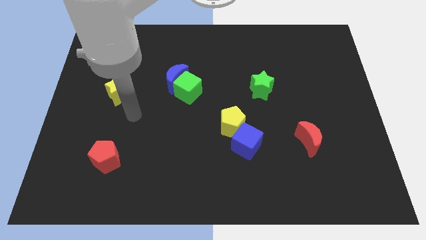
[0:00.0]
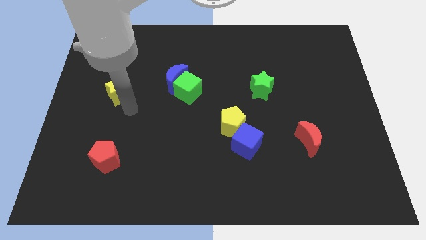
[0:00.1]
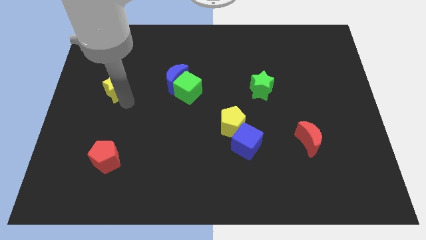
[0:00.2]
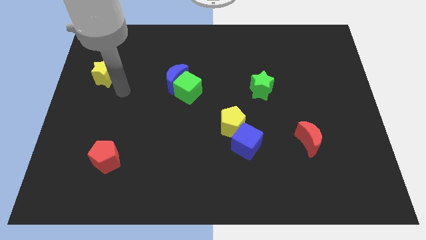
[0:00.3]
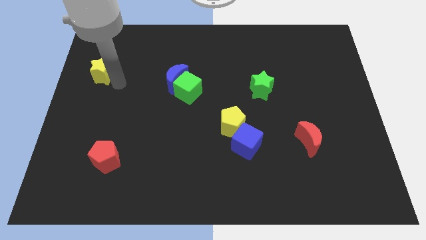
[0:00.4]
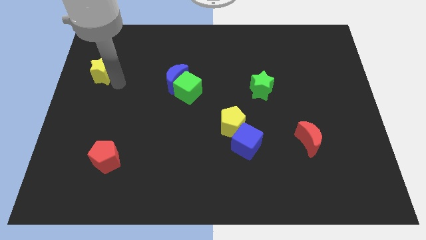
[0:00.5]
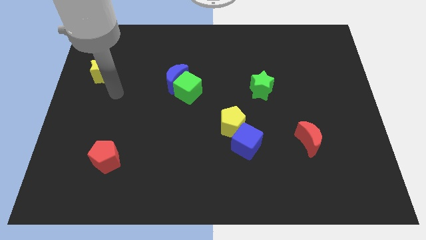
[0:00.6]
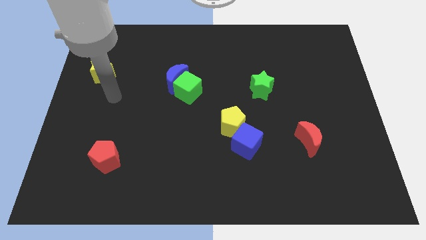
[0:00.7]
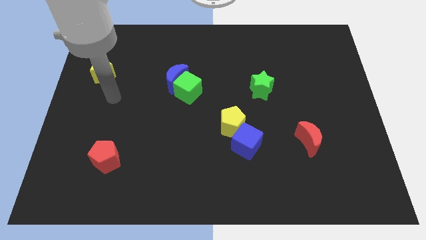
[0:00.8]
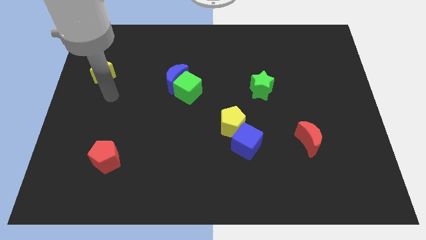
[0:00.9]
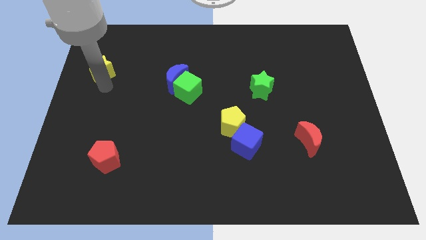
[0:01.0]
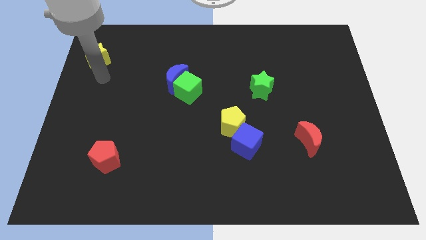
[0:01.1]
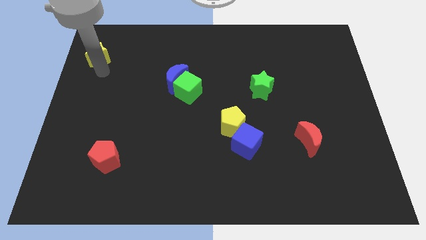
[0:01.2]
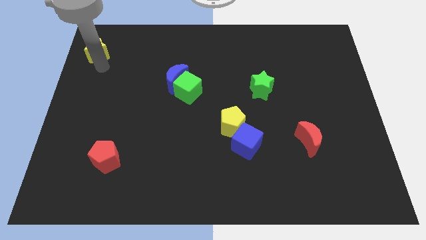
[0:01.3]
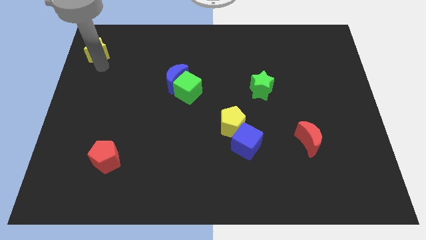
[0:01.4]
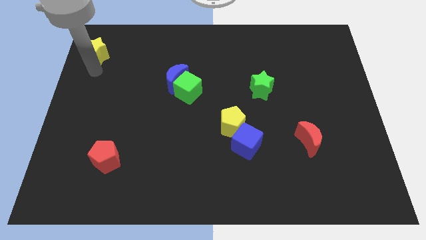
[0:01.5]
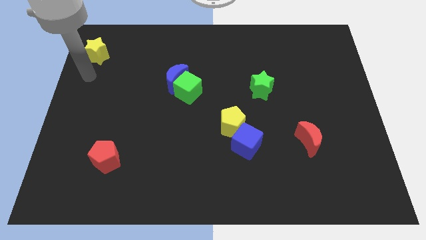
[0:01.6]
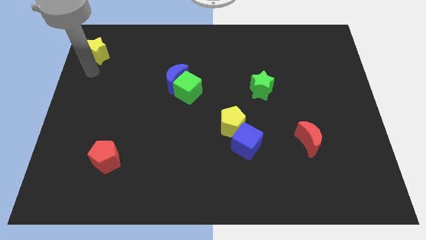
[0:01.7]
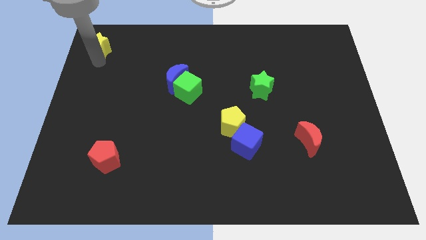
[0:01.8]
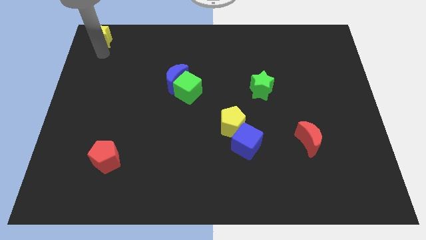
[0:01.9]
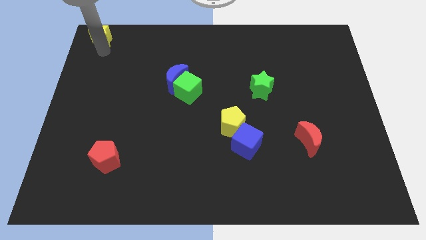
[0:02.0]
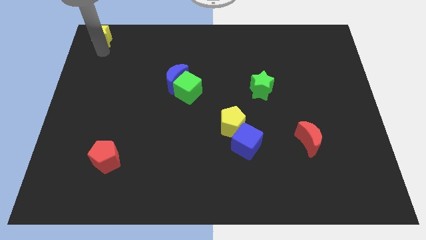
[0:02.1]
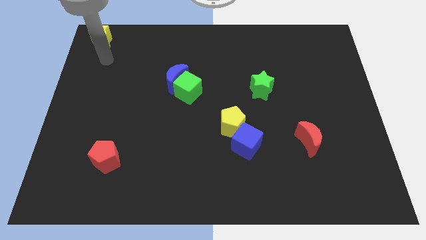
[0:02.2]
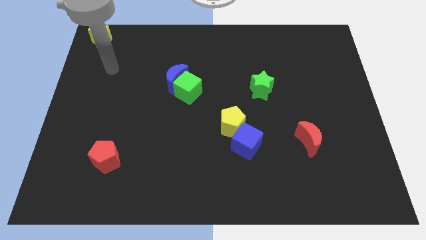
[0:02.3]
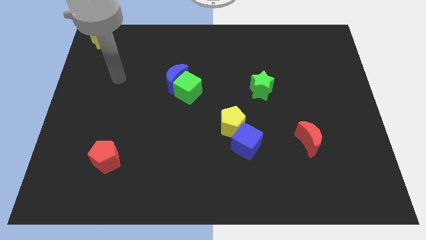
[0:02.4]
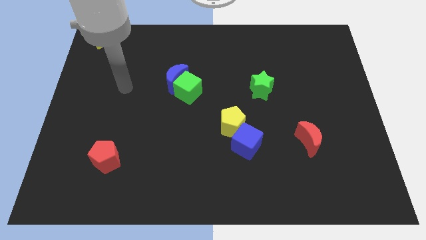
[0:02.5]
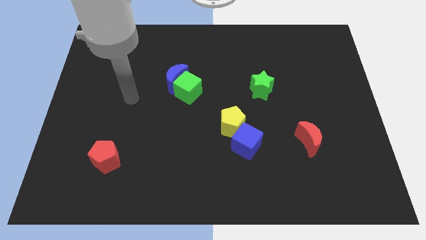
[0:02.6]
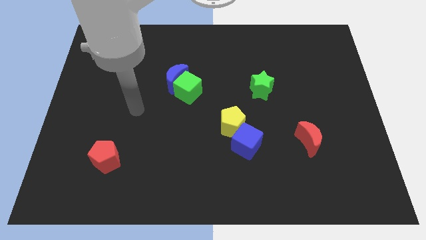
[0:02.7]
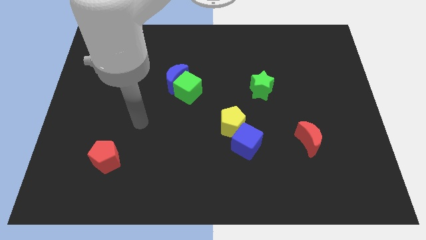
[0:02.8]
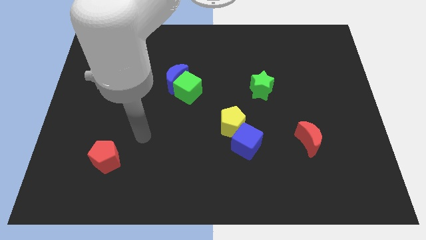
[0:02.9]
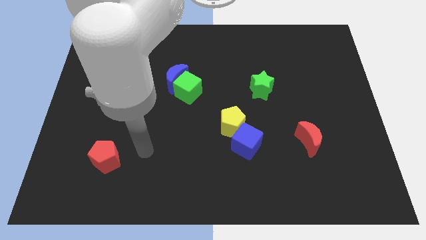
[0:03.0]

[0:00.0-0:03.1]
push the yellow star diagonally top left to the blue moon

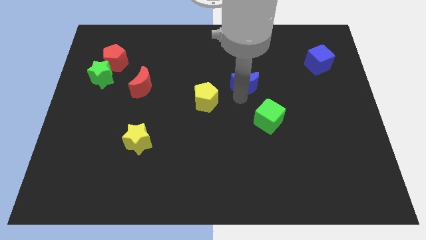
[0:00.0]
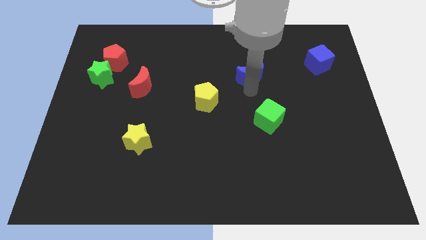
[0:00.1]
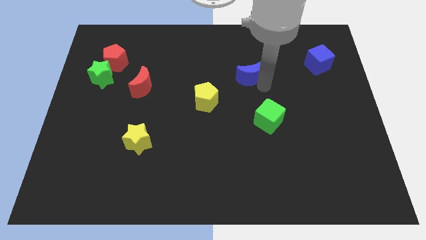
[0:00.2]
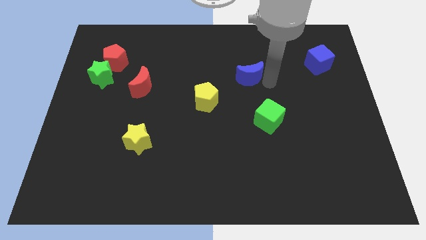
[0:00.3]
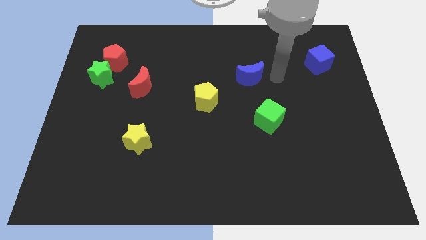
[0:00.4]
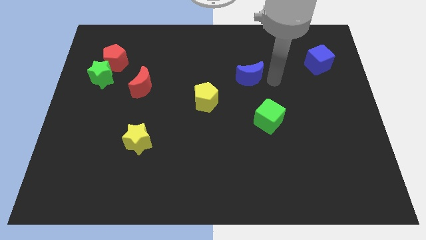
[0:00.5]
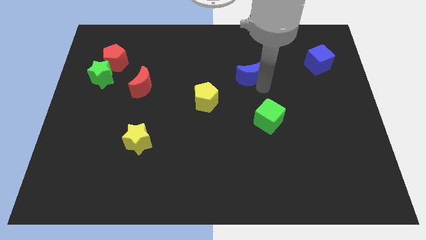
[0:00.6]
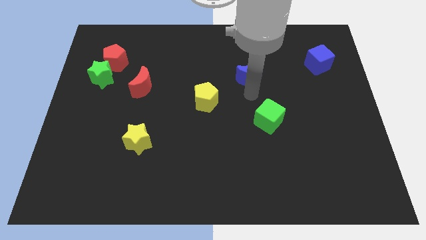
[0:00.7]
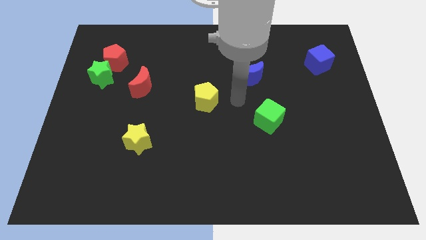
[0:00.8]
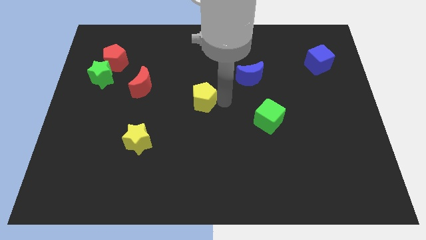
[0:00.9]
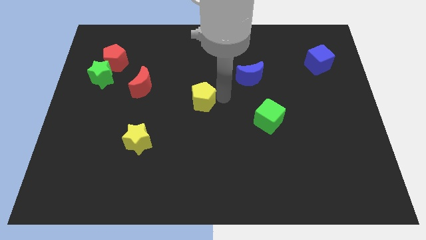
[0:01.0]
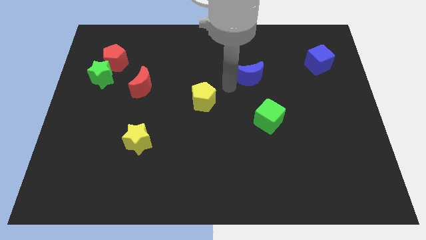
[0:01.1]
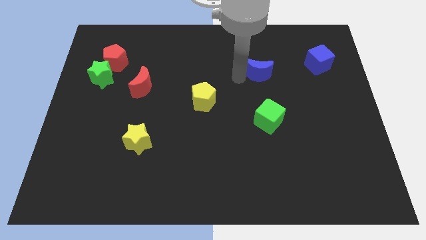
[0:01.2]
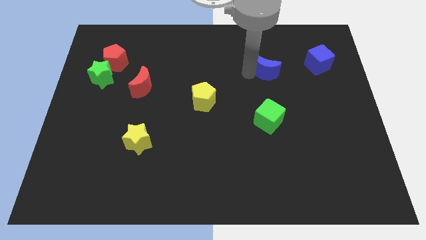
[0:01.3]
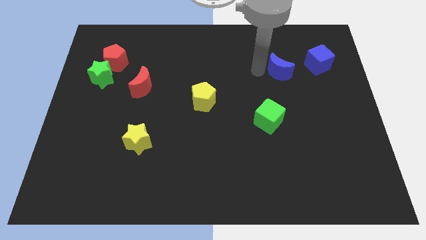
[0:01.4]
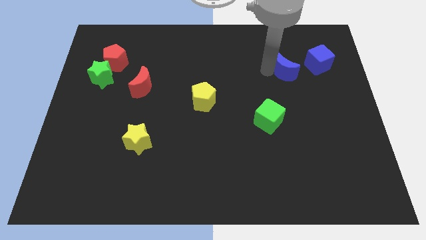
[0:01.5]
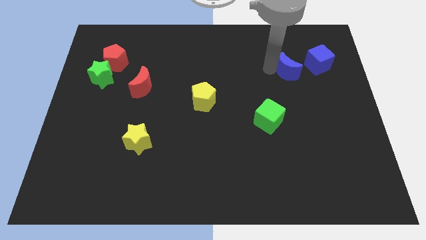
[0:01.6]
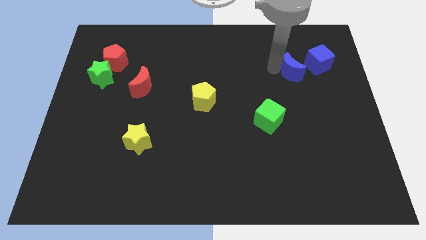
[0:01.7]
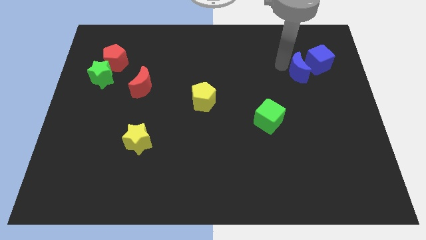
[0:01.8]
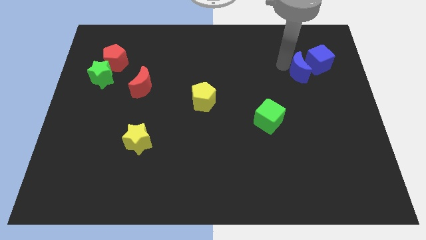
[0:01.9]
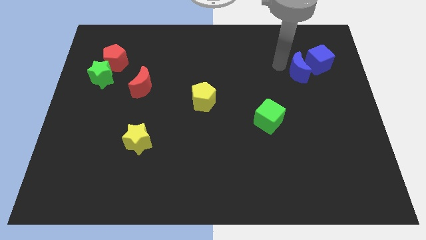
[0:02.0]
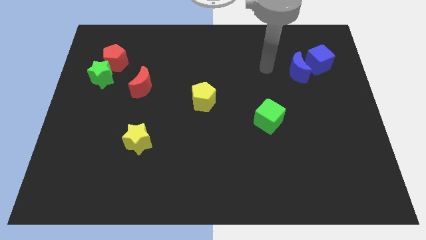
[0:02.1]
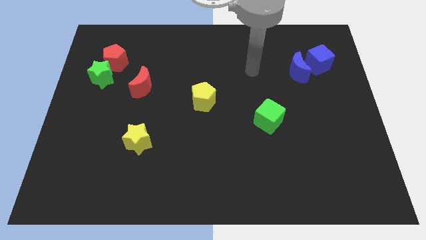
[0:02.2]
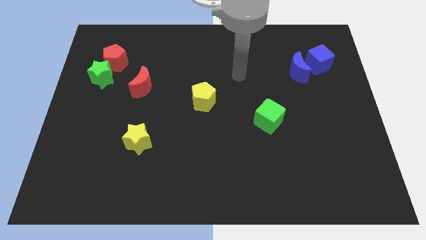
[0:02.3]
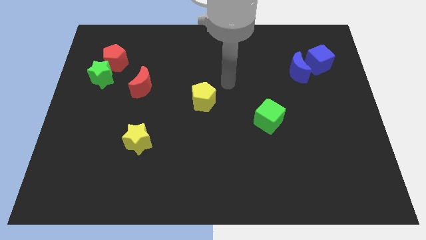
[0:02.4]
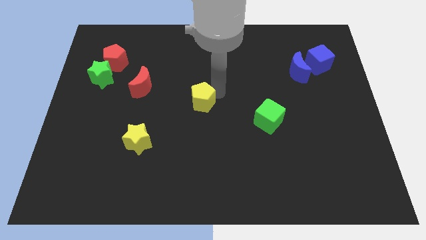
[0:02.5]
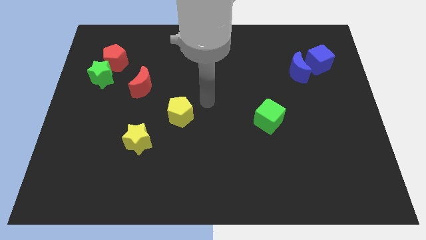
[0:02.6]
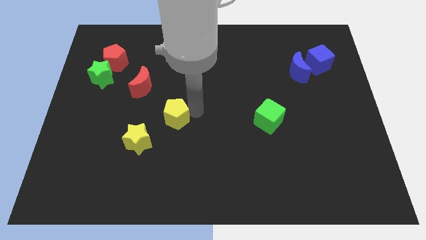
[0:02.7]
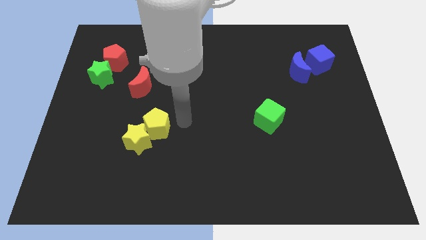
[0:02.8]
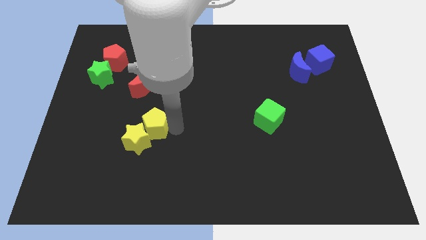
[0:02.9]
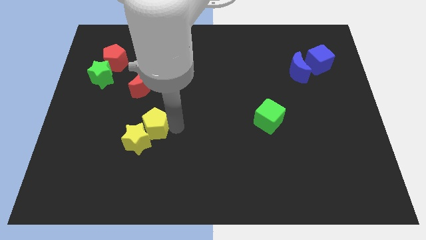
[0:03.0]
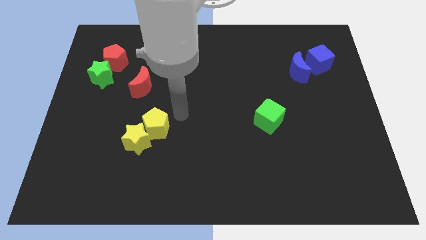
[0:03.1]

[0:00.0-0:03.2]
place the blue moon at the left side of the blue cube

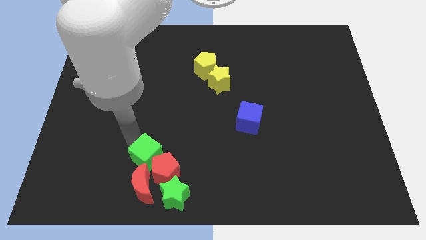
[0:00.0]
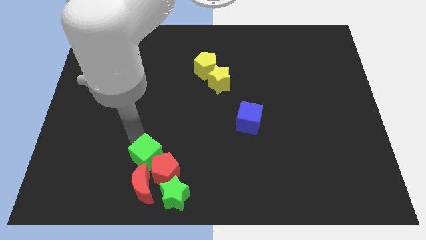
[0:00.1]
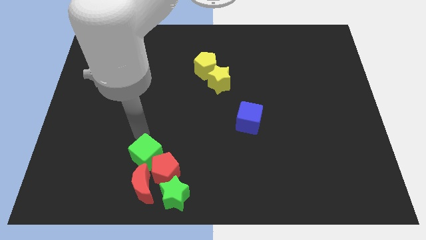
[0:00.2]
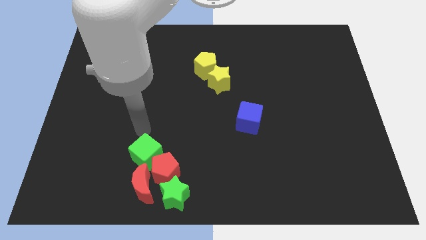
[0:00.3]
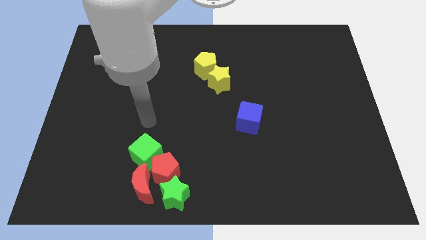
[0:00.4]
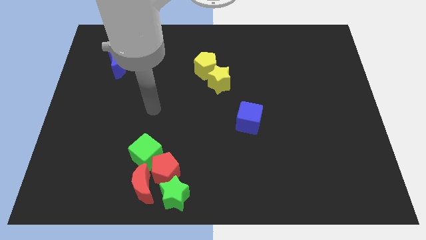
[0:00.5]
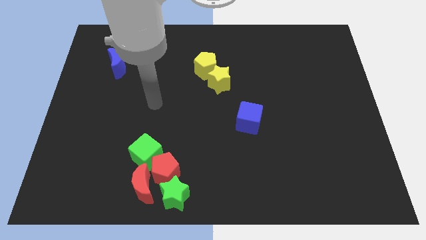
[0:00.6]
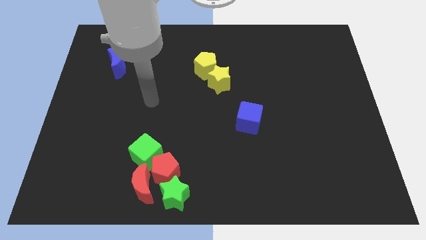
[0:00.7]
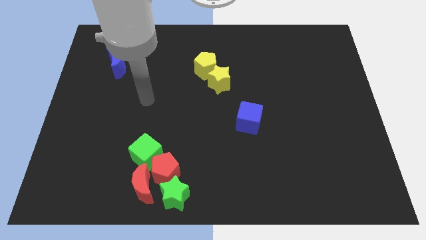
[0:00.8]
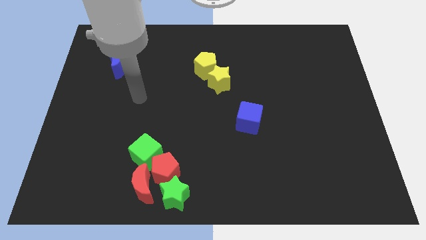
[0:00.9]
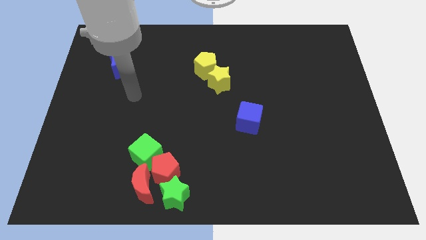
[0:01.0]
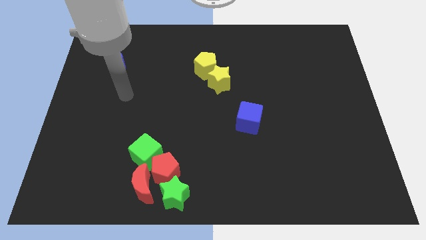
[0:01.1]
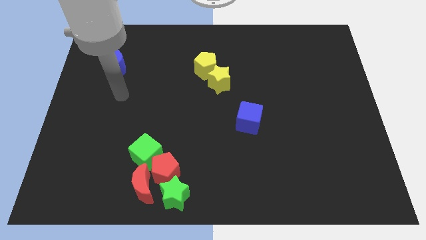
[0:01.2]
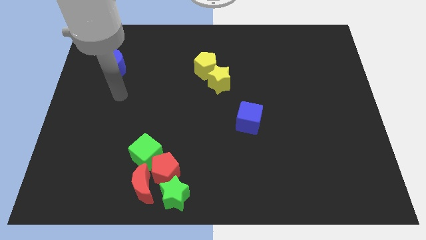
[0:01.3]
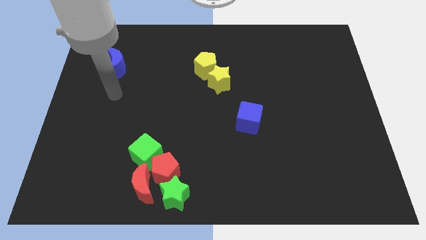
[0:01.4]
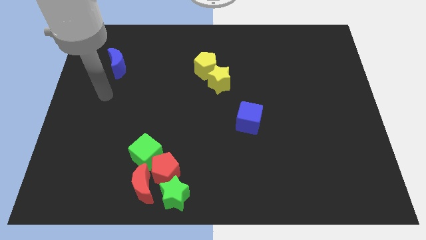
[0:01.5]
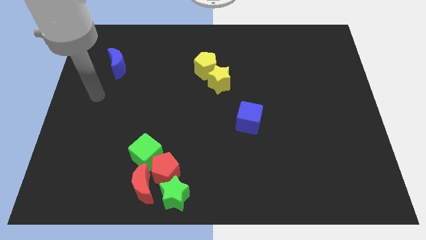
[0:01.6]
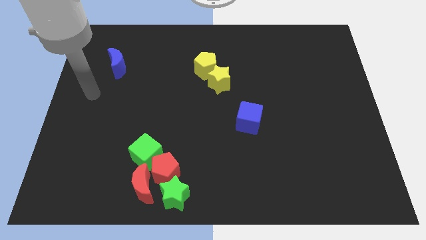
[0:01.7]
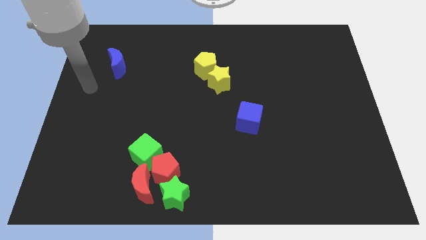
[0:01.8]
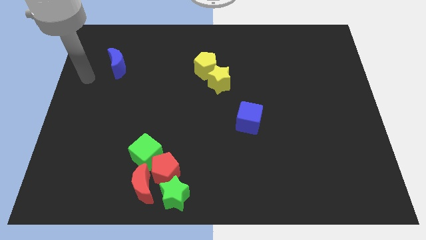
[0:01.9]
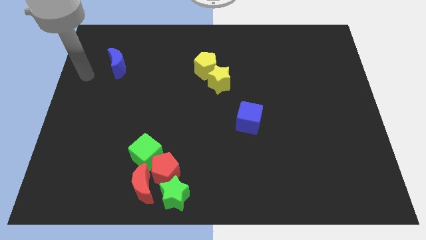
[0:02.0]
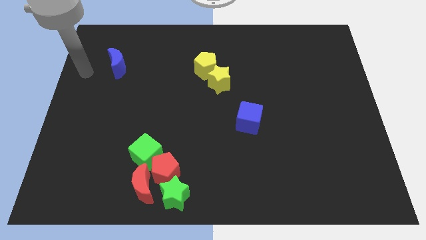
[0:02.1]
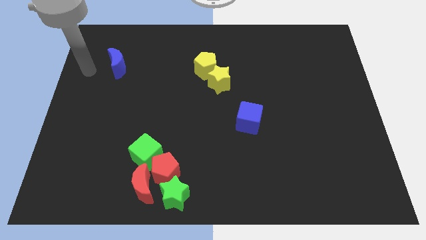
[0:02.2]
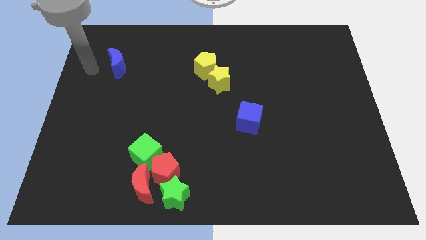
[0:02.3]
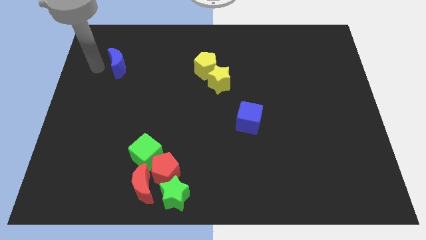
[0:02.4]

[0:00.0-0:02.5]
move your arm away from the green cube
